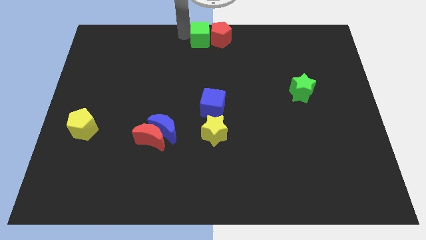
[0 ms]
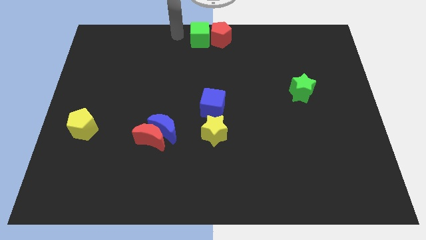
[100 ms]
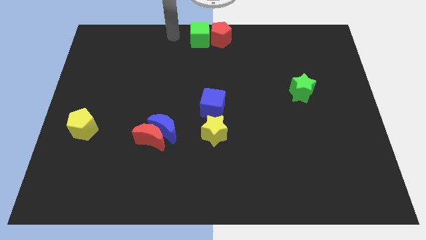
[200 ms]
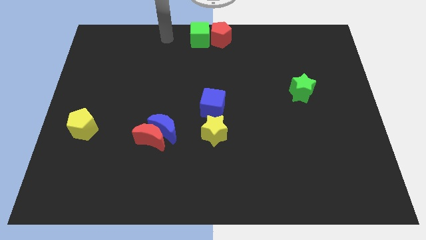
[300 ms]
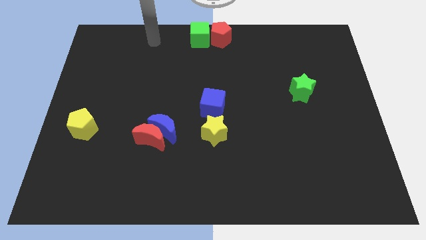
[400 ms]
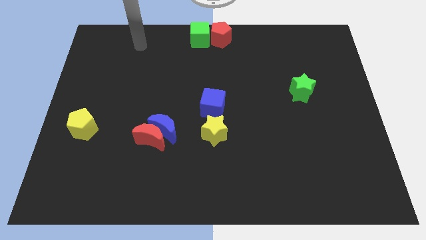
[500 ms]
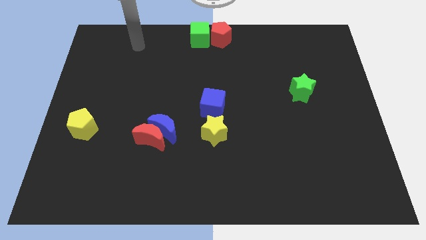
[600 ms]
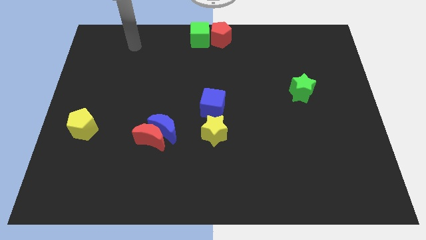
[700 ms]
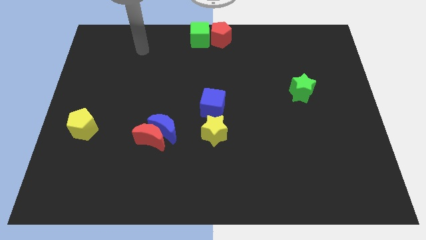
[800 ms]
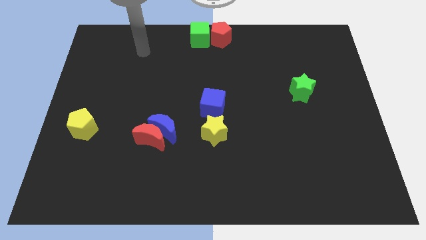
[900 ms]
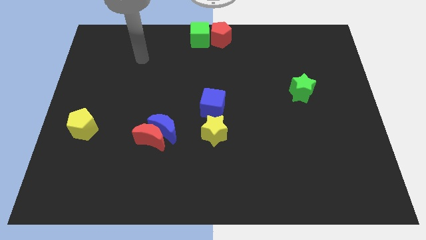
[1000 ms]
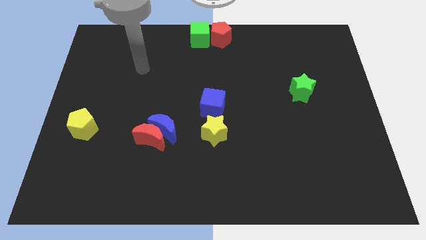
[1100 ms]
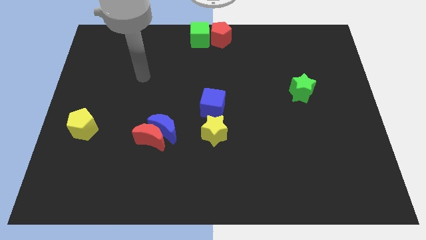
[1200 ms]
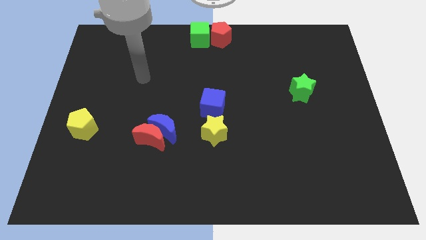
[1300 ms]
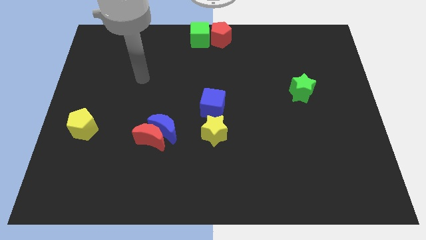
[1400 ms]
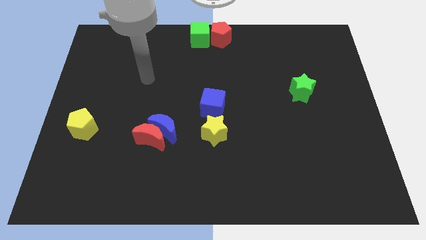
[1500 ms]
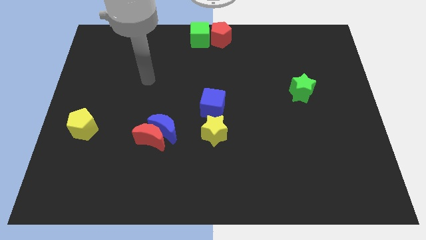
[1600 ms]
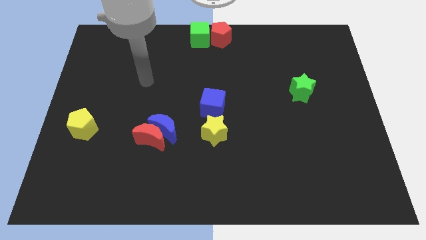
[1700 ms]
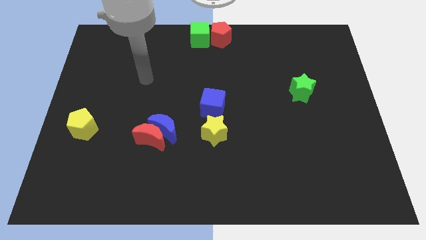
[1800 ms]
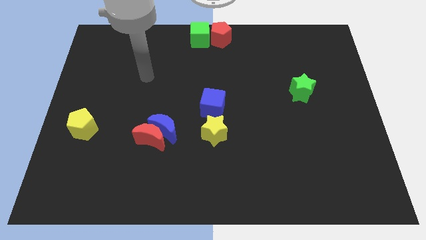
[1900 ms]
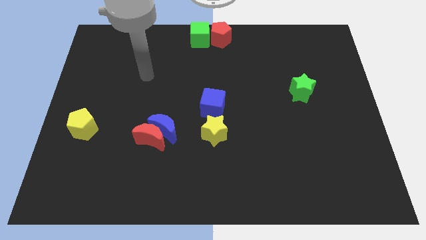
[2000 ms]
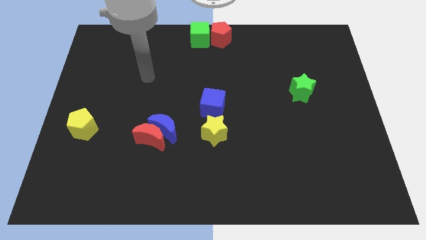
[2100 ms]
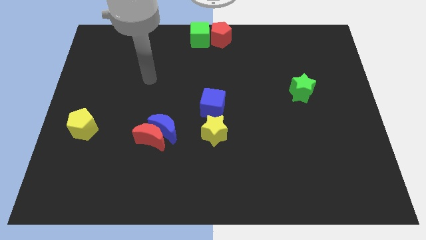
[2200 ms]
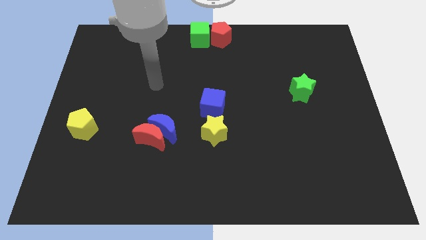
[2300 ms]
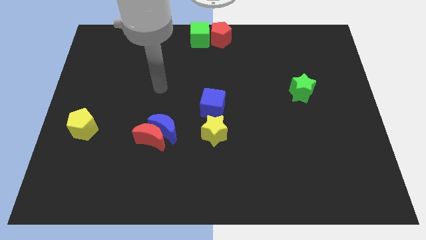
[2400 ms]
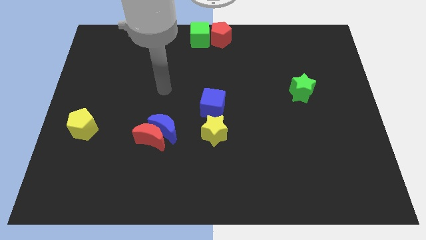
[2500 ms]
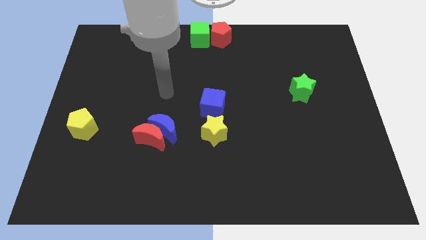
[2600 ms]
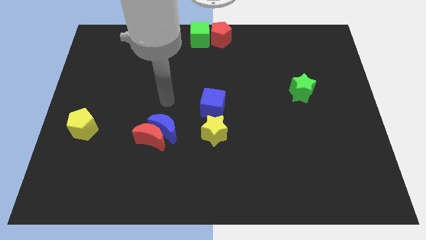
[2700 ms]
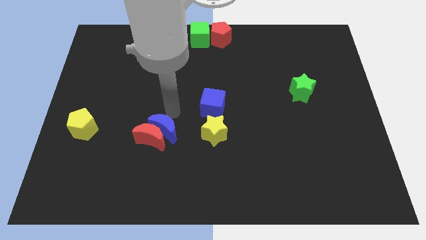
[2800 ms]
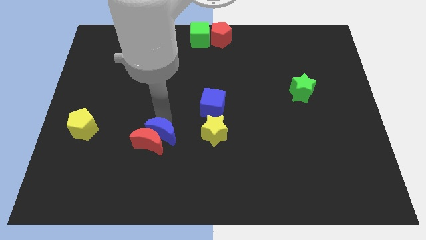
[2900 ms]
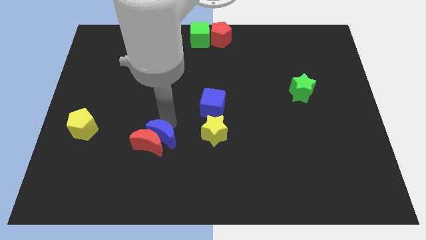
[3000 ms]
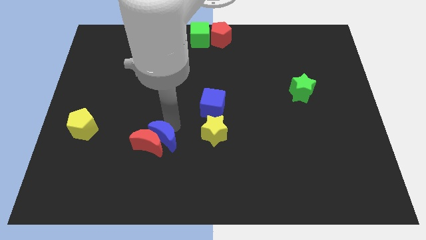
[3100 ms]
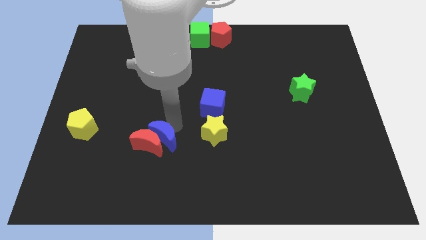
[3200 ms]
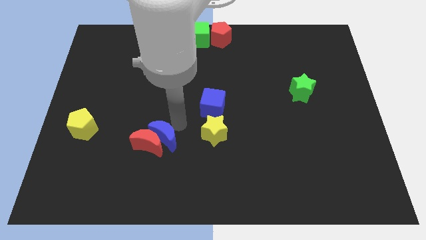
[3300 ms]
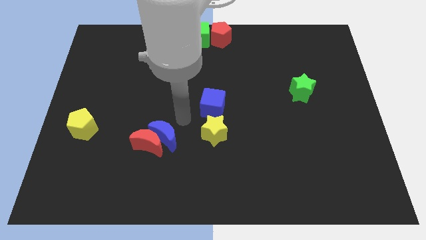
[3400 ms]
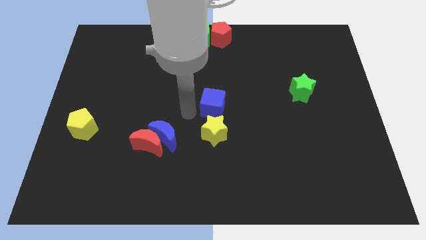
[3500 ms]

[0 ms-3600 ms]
push the blue moon into the red moon

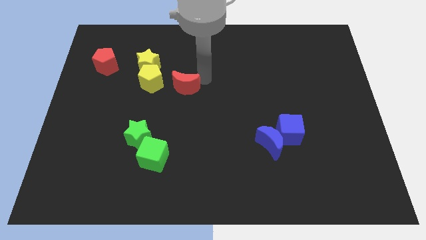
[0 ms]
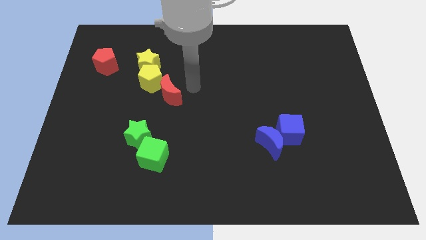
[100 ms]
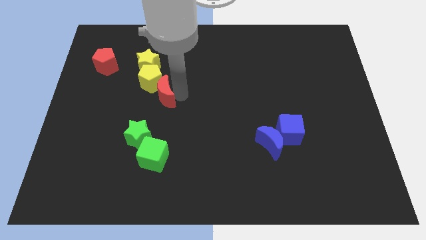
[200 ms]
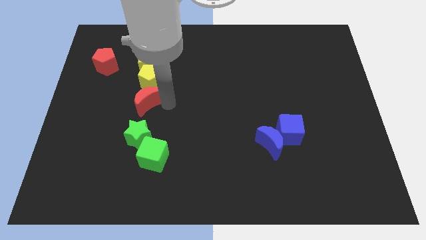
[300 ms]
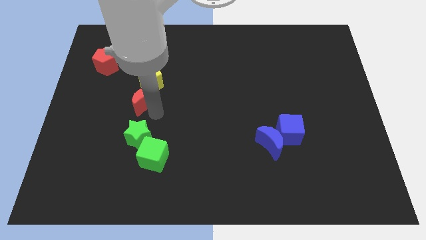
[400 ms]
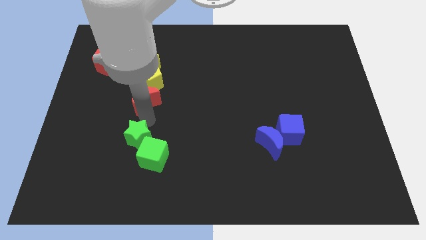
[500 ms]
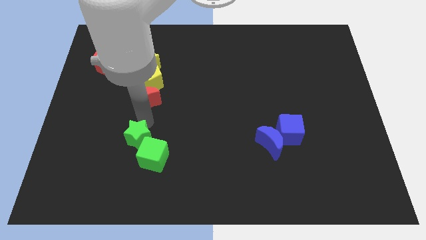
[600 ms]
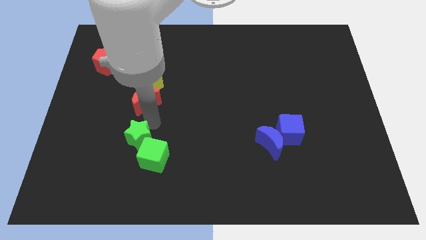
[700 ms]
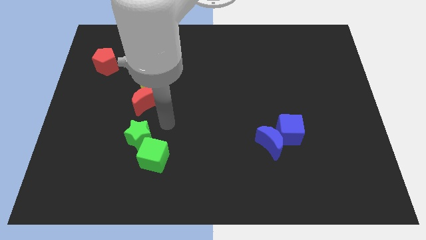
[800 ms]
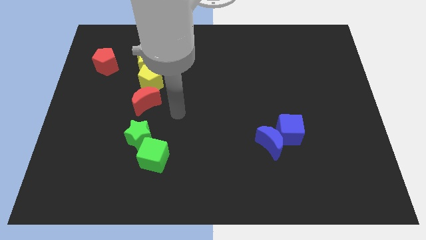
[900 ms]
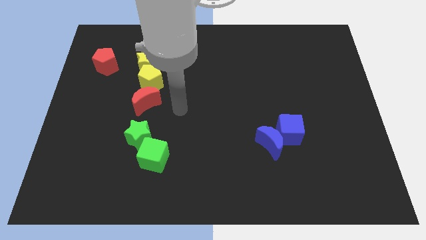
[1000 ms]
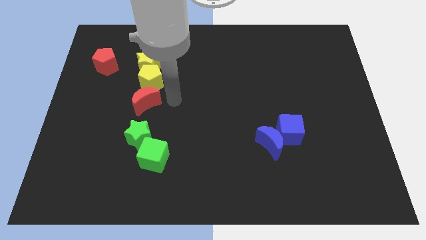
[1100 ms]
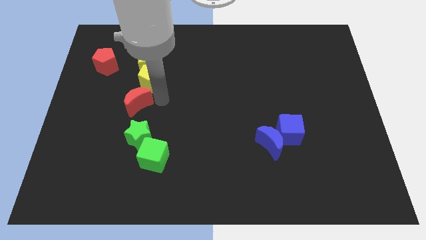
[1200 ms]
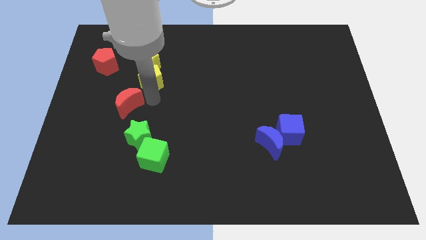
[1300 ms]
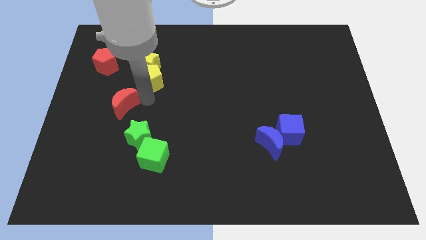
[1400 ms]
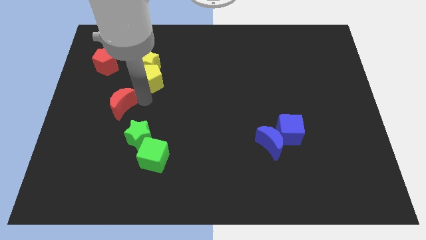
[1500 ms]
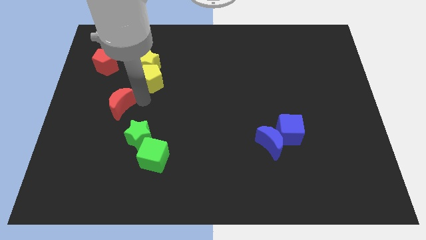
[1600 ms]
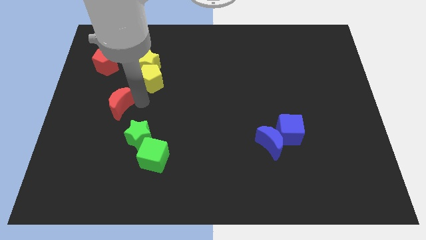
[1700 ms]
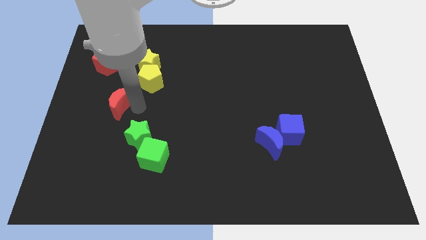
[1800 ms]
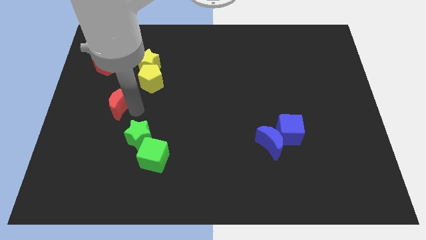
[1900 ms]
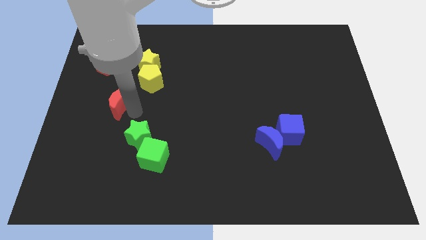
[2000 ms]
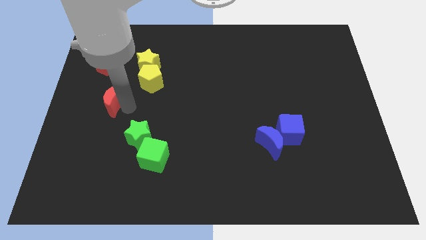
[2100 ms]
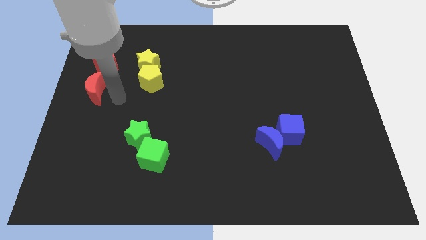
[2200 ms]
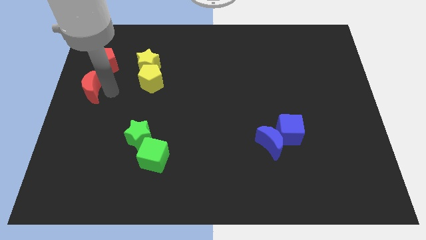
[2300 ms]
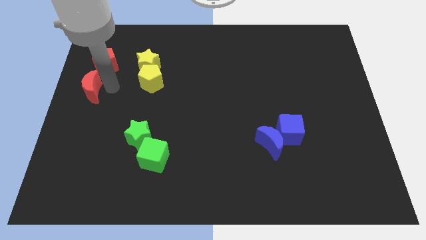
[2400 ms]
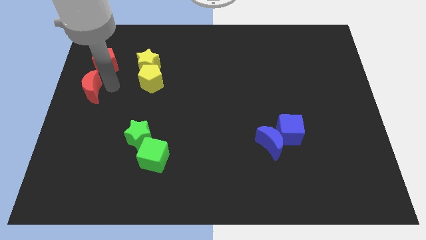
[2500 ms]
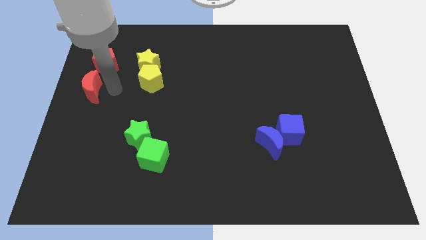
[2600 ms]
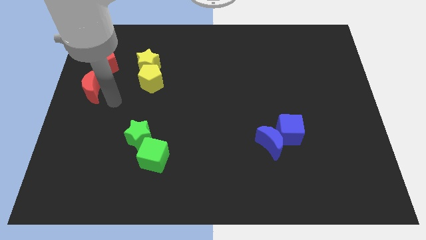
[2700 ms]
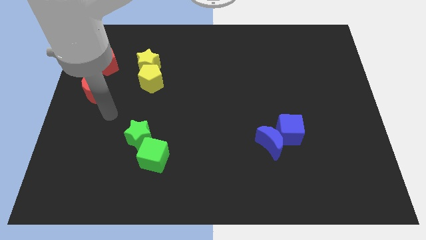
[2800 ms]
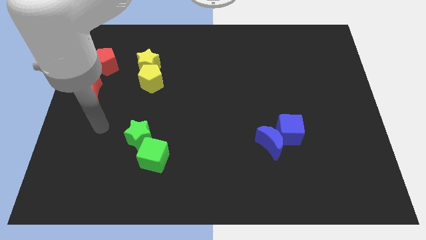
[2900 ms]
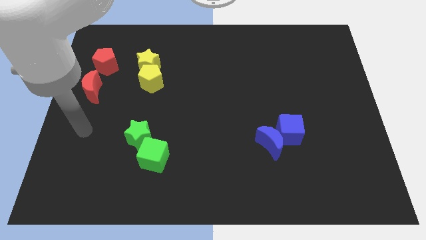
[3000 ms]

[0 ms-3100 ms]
drag the red moon diagonally above green star

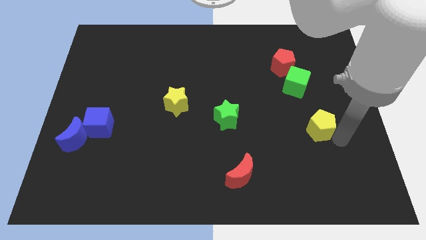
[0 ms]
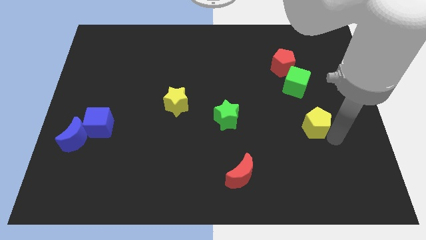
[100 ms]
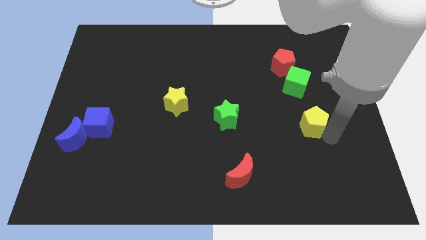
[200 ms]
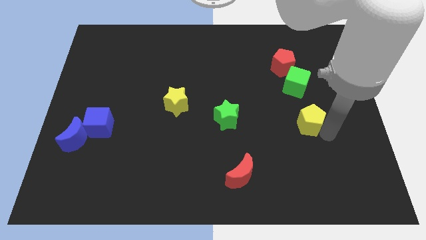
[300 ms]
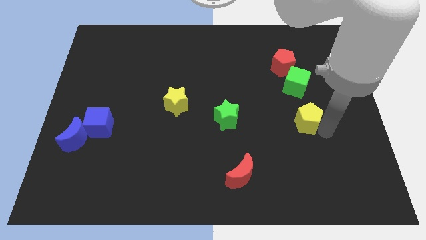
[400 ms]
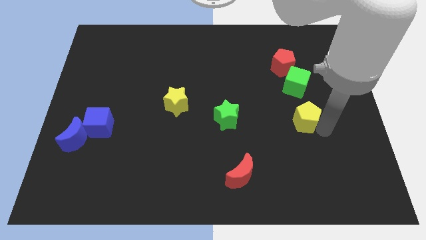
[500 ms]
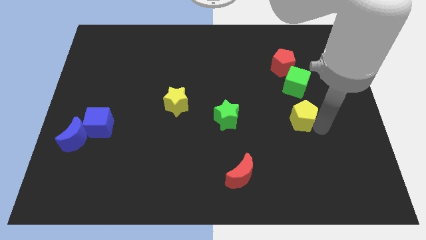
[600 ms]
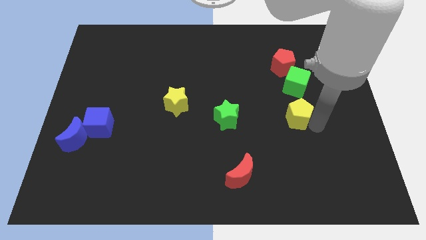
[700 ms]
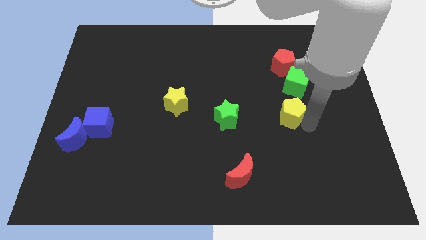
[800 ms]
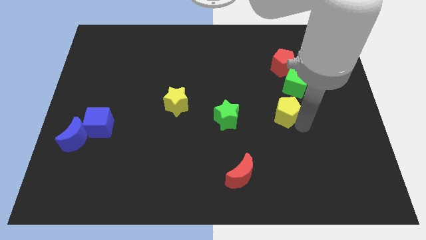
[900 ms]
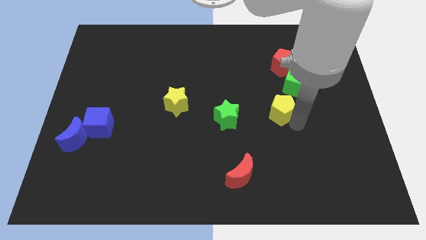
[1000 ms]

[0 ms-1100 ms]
place the yellow pentagon below the green cube

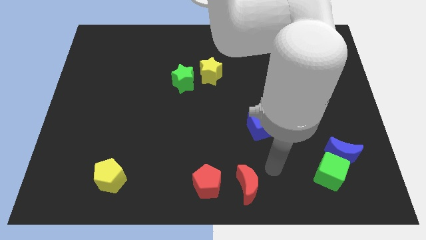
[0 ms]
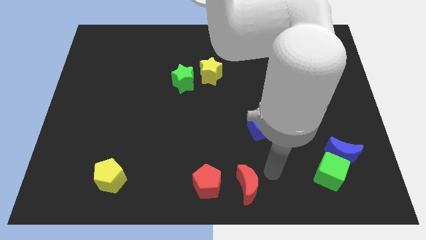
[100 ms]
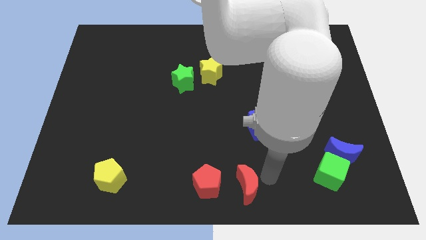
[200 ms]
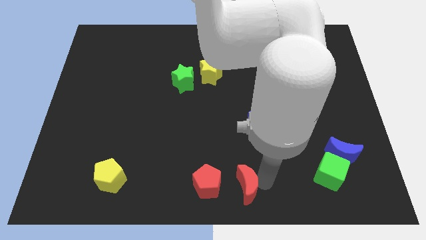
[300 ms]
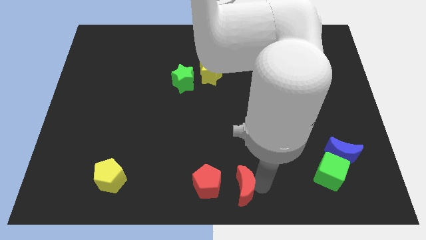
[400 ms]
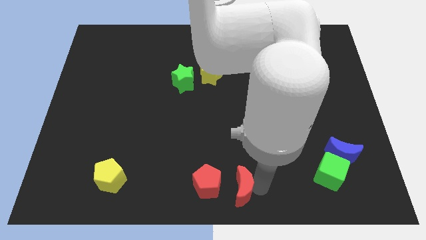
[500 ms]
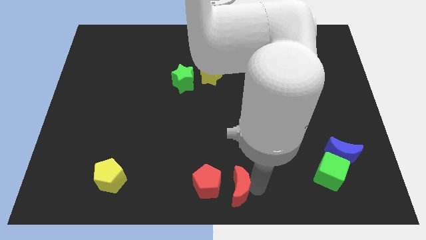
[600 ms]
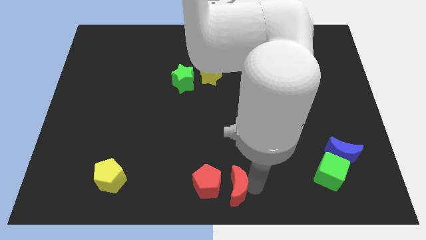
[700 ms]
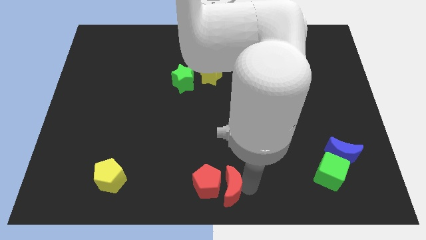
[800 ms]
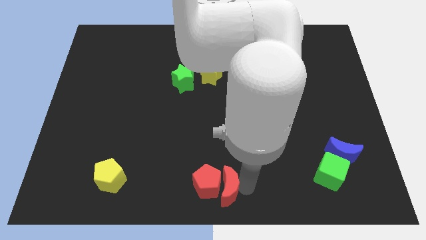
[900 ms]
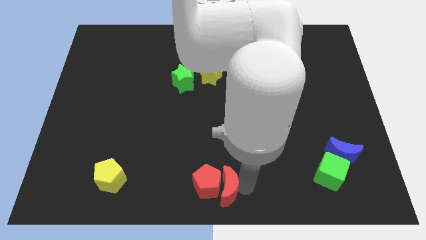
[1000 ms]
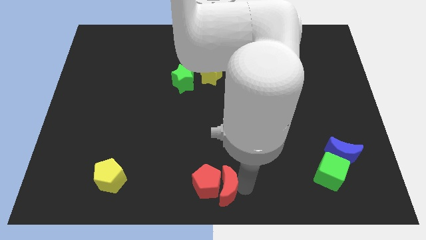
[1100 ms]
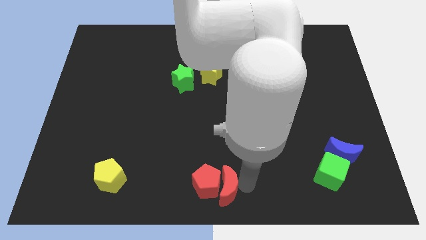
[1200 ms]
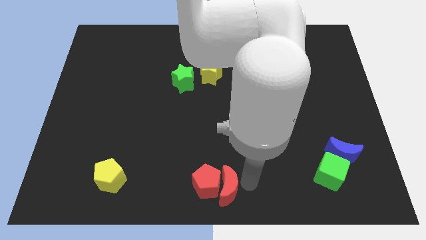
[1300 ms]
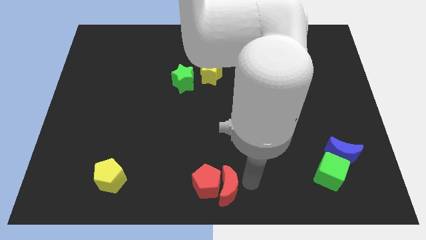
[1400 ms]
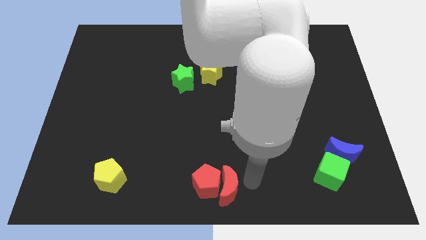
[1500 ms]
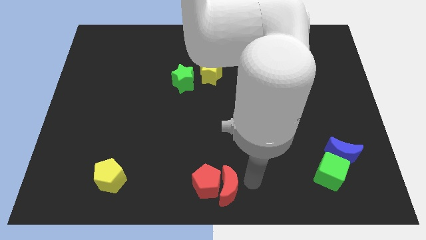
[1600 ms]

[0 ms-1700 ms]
push red crescent into red pentagon
